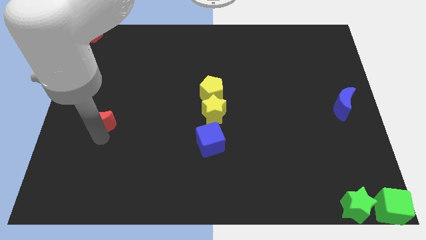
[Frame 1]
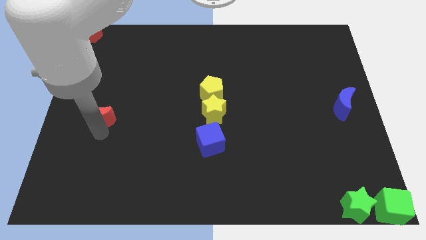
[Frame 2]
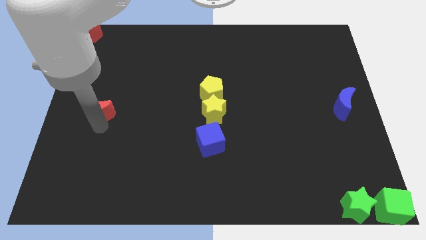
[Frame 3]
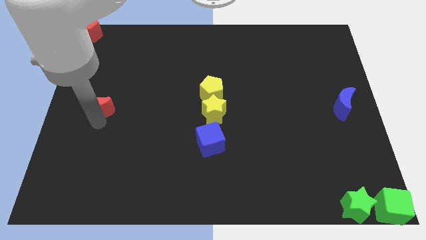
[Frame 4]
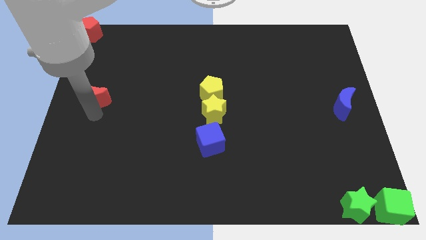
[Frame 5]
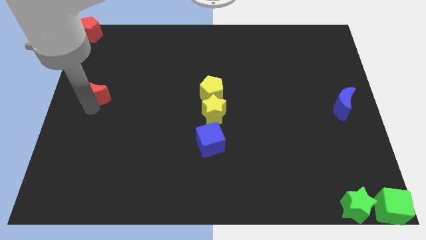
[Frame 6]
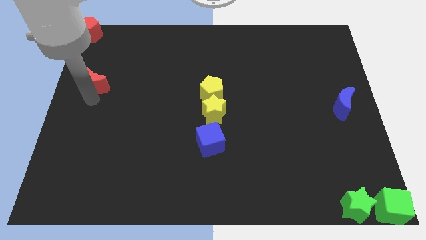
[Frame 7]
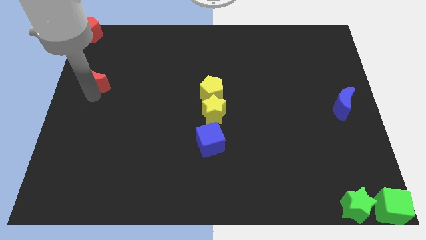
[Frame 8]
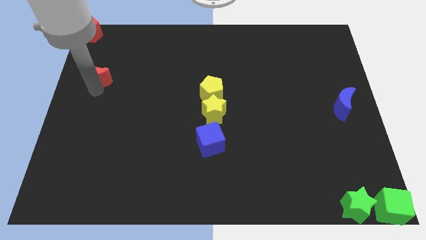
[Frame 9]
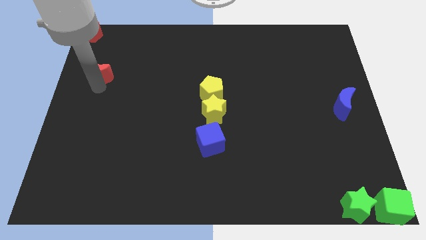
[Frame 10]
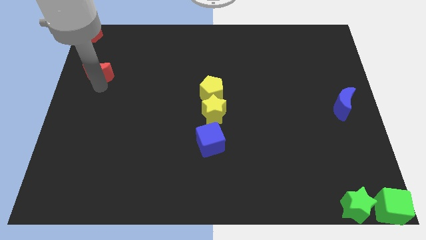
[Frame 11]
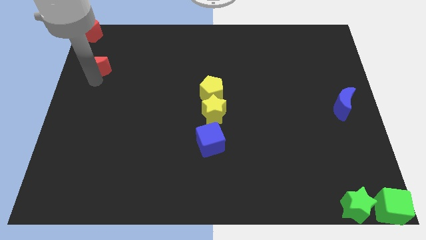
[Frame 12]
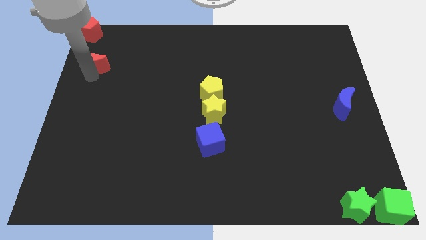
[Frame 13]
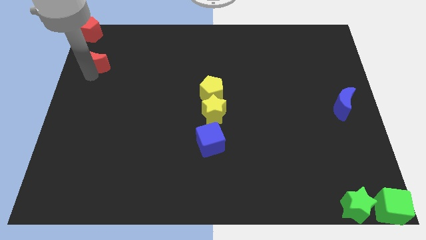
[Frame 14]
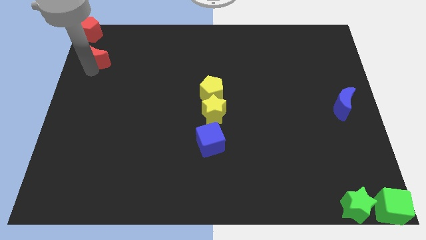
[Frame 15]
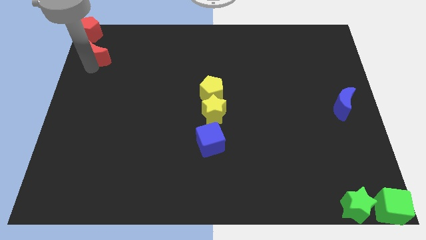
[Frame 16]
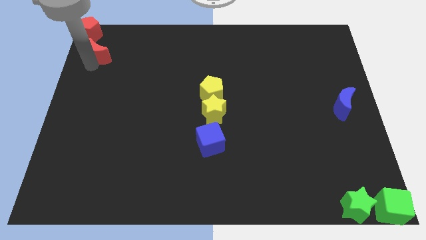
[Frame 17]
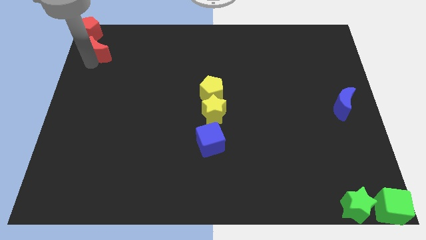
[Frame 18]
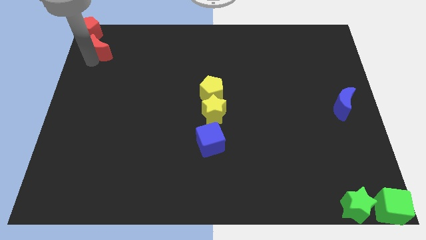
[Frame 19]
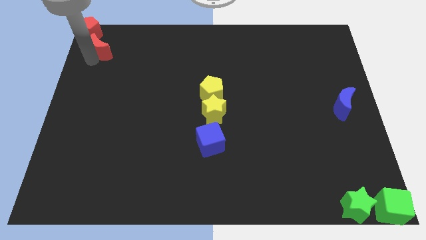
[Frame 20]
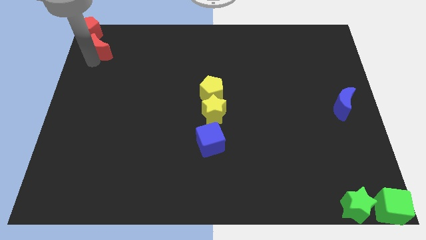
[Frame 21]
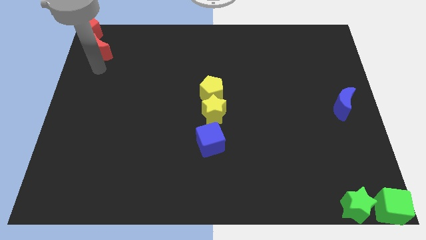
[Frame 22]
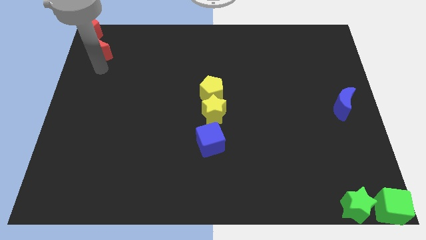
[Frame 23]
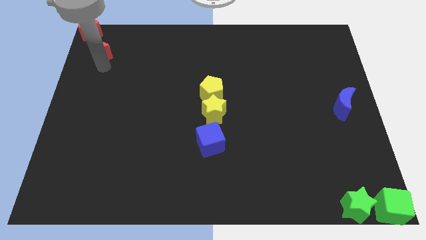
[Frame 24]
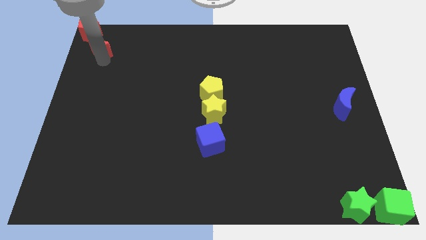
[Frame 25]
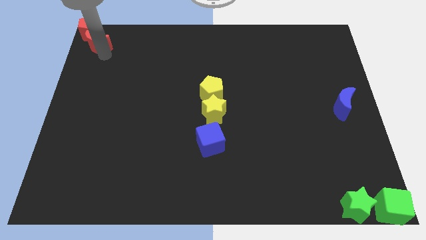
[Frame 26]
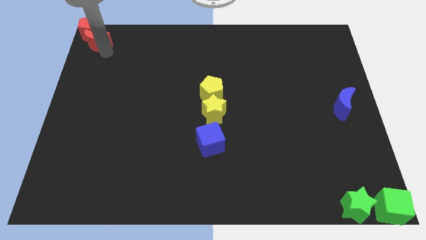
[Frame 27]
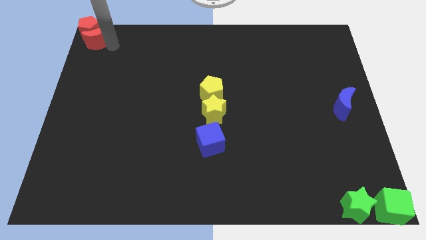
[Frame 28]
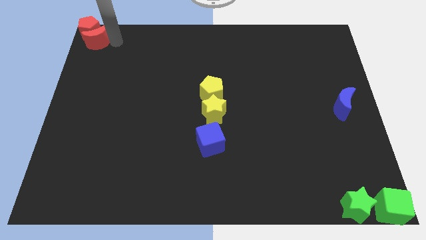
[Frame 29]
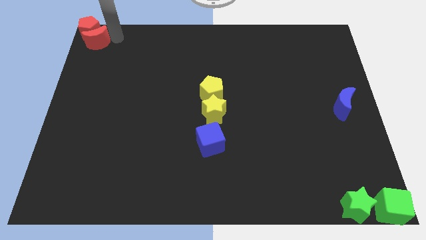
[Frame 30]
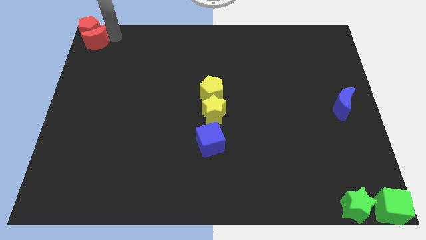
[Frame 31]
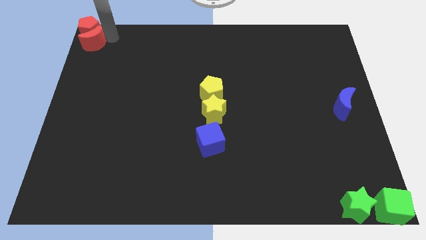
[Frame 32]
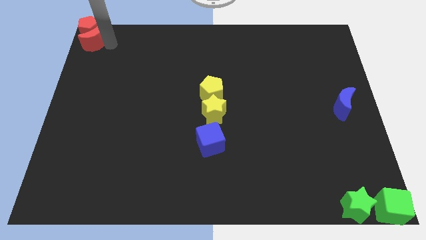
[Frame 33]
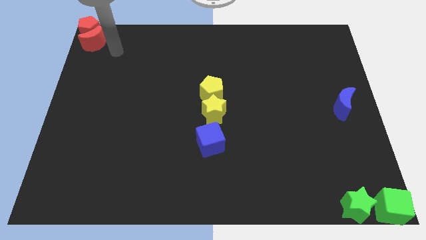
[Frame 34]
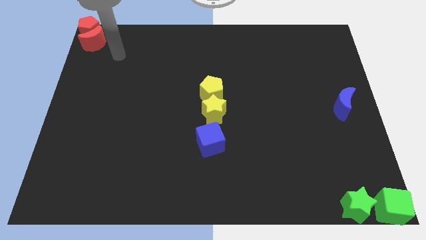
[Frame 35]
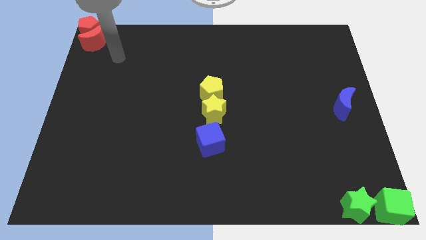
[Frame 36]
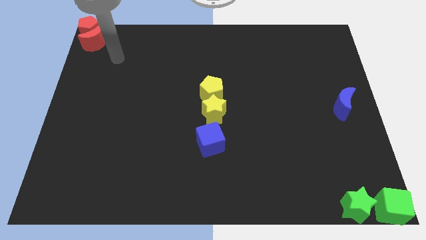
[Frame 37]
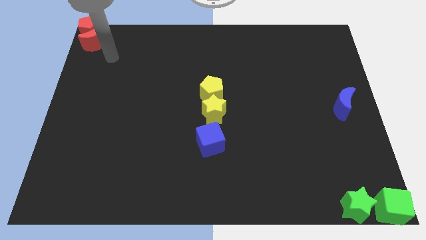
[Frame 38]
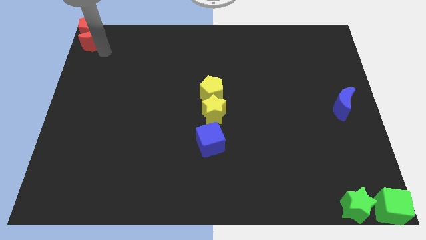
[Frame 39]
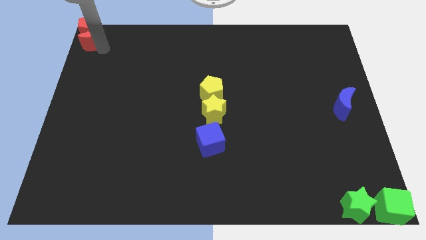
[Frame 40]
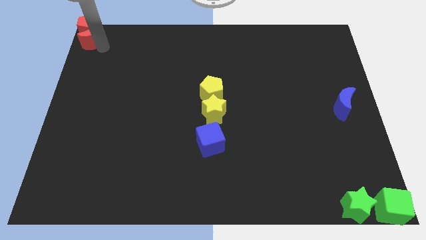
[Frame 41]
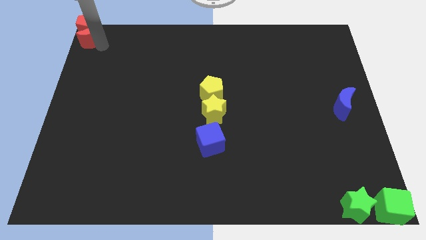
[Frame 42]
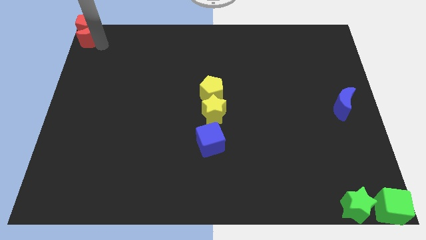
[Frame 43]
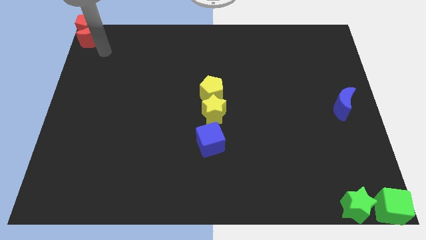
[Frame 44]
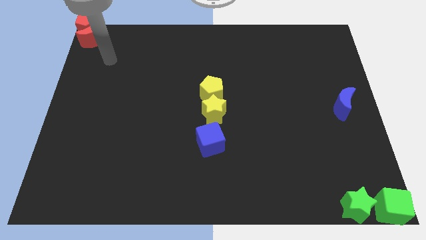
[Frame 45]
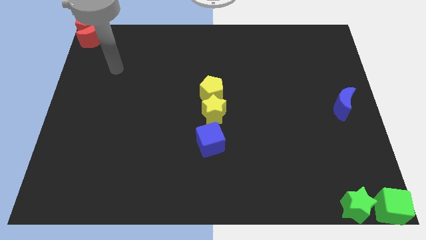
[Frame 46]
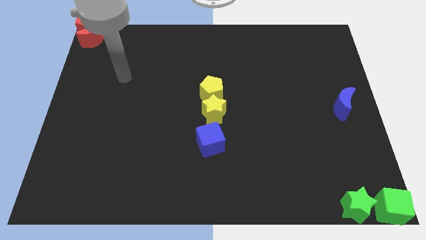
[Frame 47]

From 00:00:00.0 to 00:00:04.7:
push the red crescent into the red pentagon

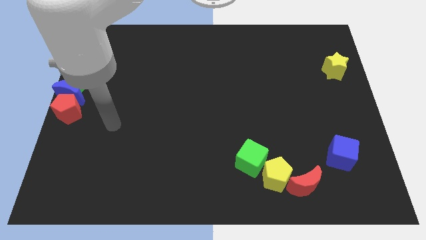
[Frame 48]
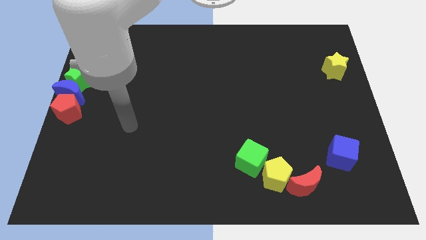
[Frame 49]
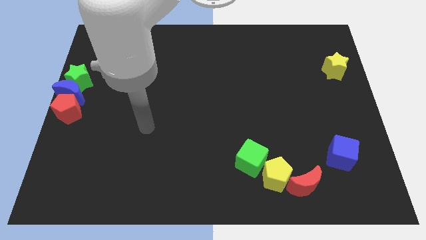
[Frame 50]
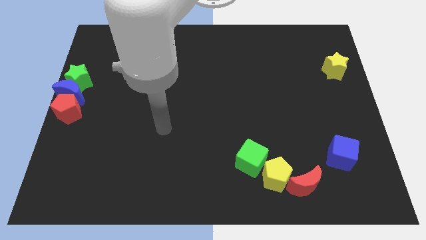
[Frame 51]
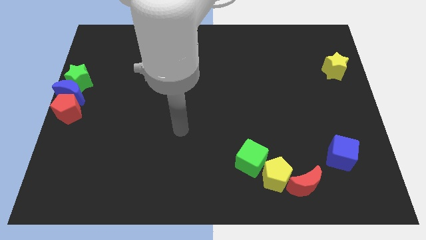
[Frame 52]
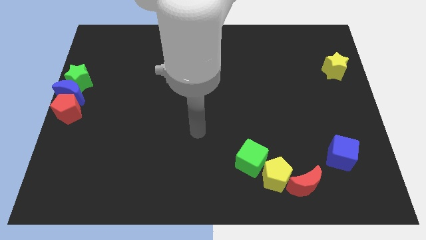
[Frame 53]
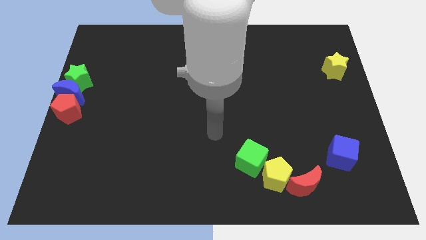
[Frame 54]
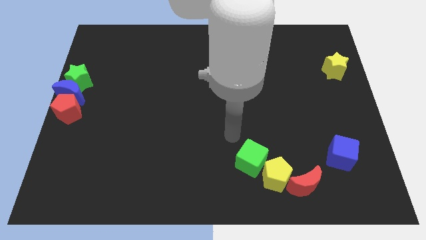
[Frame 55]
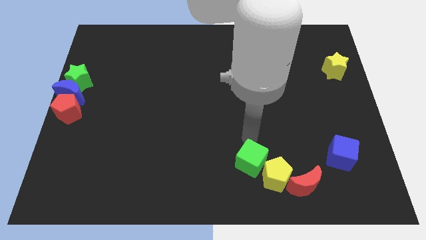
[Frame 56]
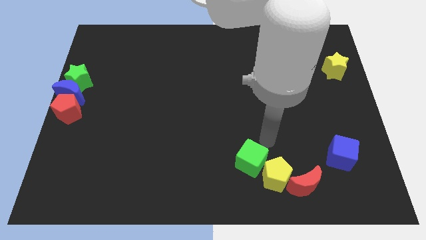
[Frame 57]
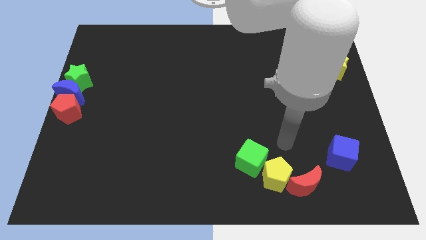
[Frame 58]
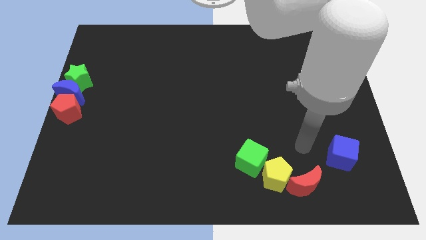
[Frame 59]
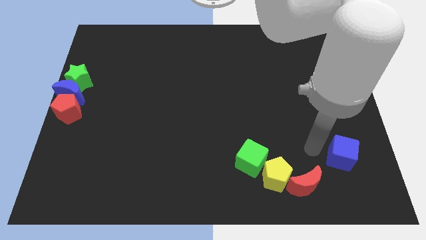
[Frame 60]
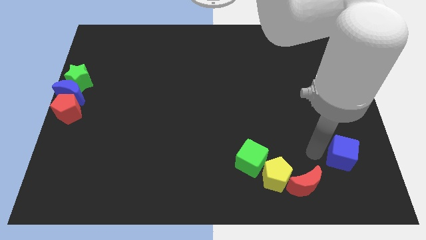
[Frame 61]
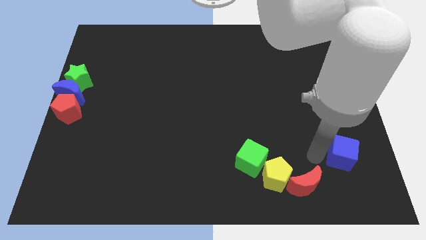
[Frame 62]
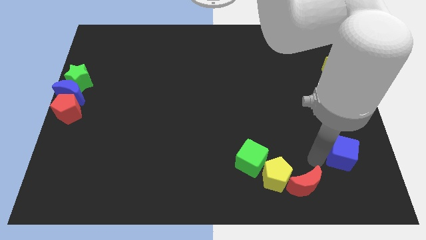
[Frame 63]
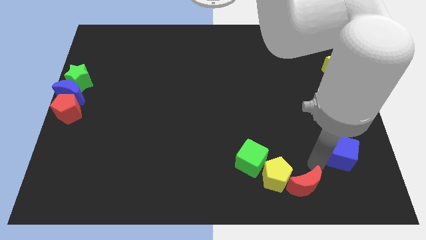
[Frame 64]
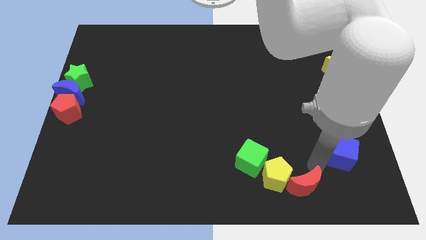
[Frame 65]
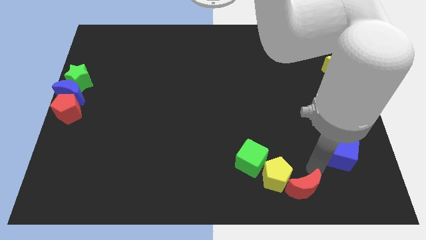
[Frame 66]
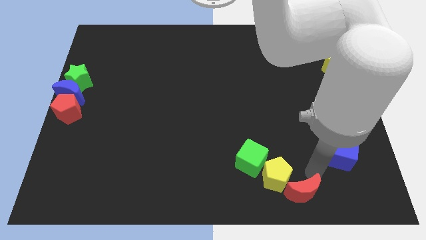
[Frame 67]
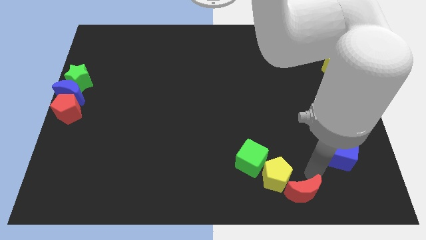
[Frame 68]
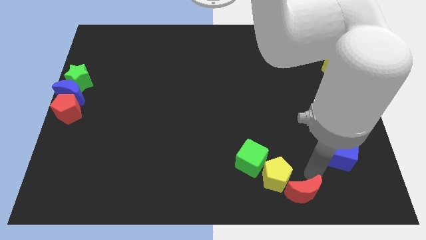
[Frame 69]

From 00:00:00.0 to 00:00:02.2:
slide the red crescent towards bottom side

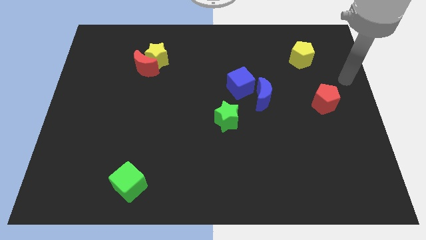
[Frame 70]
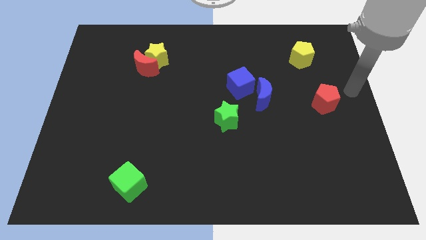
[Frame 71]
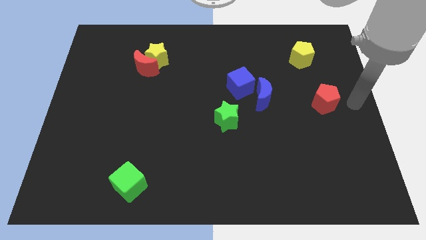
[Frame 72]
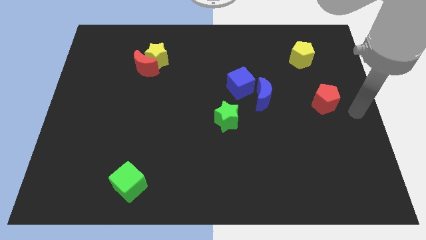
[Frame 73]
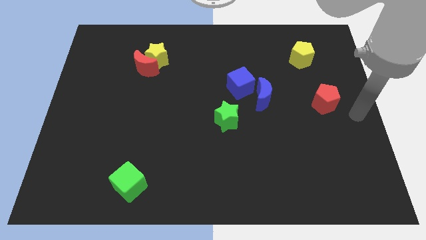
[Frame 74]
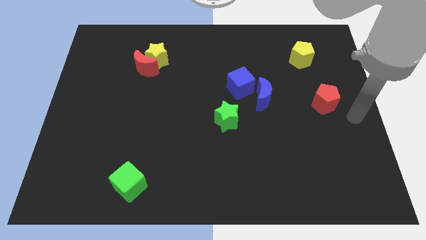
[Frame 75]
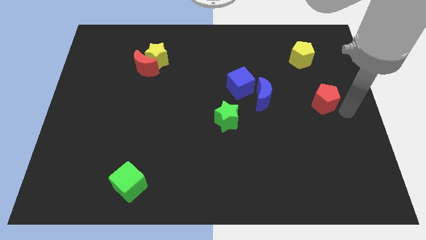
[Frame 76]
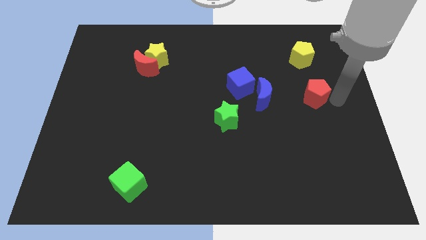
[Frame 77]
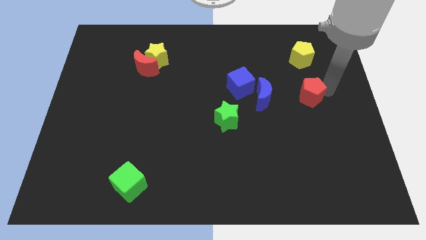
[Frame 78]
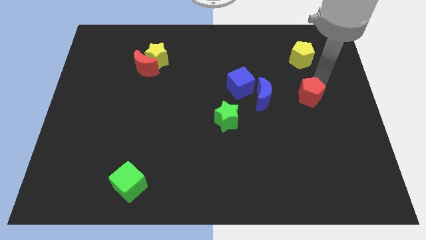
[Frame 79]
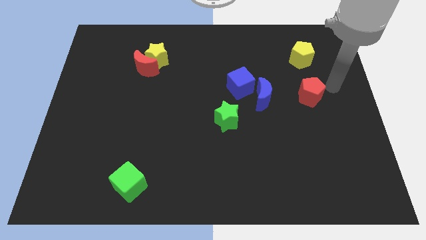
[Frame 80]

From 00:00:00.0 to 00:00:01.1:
move red pentagon below yellow pentagon

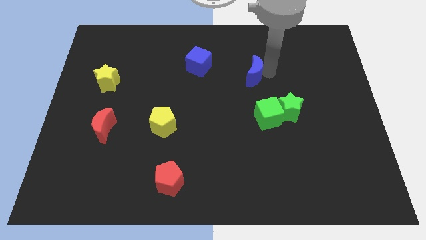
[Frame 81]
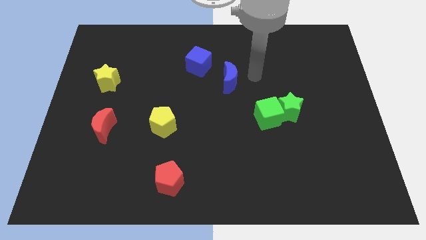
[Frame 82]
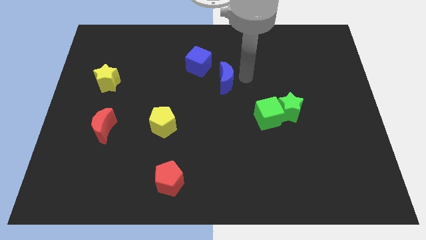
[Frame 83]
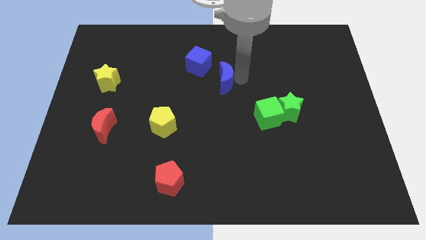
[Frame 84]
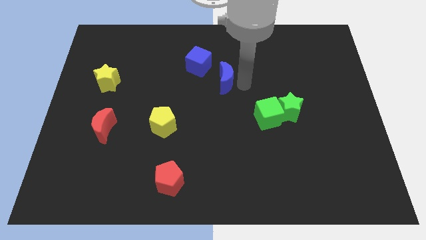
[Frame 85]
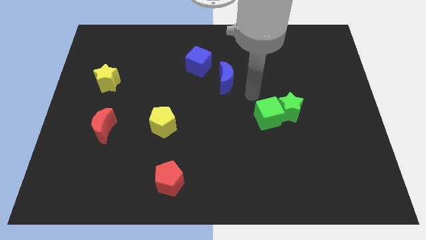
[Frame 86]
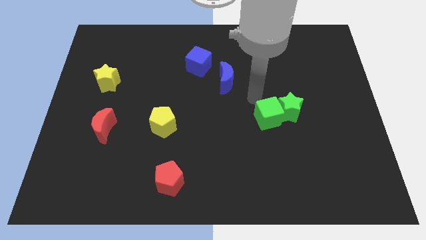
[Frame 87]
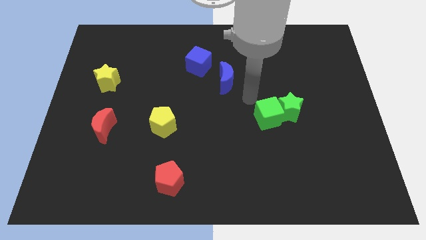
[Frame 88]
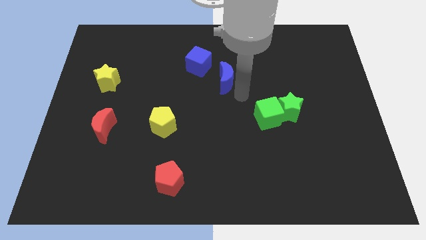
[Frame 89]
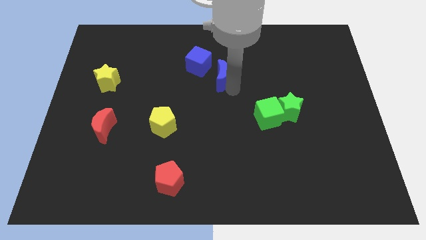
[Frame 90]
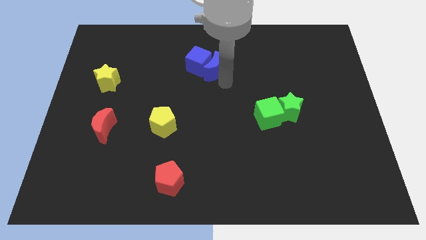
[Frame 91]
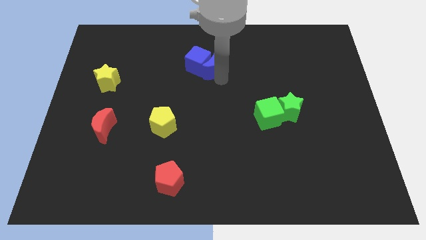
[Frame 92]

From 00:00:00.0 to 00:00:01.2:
push blue crescent towards blue cube
